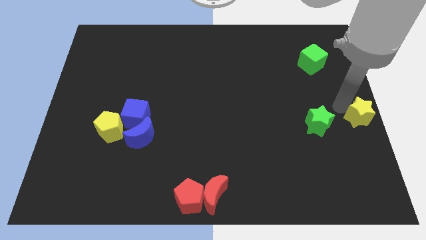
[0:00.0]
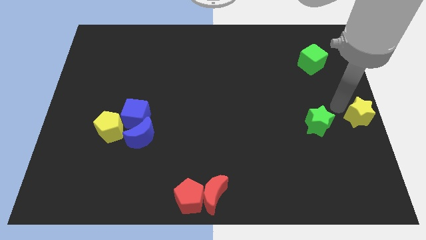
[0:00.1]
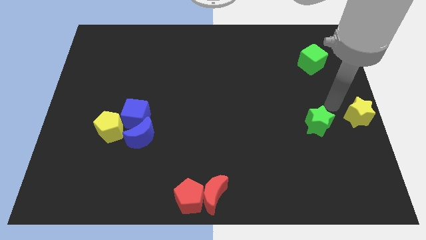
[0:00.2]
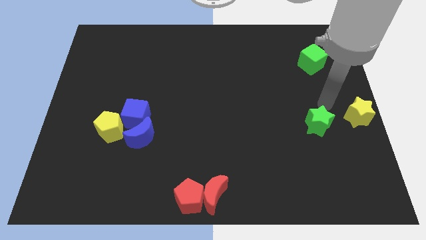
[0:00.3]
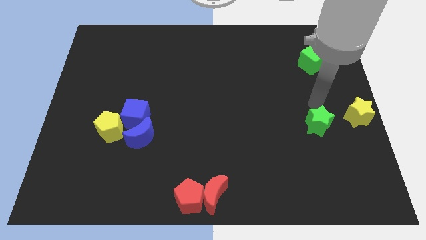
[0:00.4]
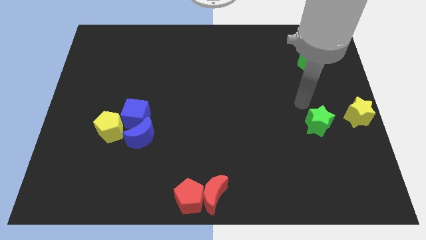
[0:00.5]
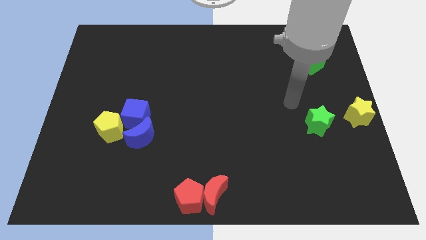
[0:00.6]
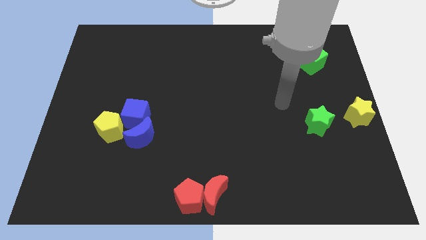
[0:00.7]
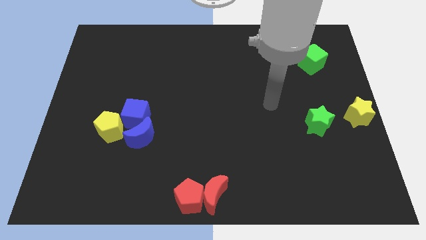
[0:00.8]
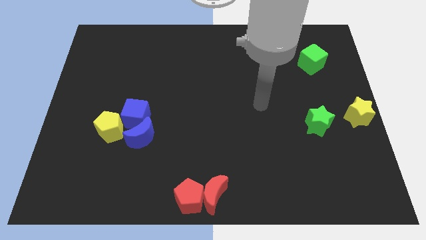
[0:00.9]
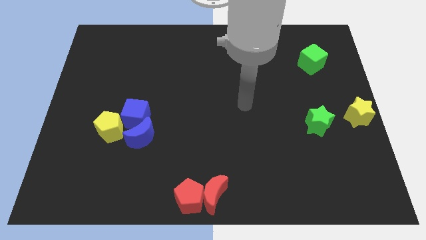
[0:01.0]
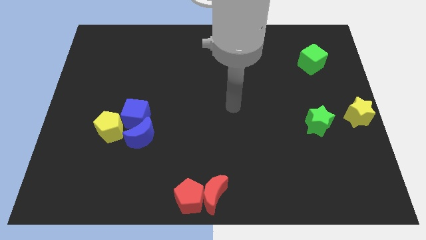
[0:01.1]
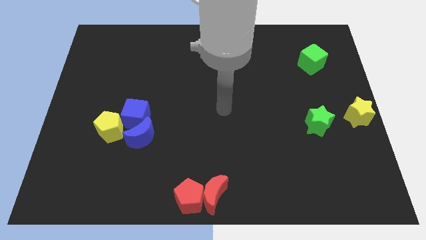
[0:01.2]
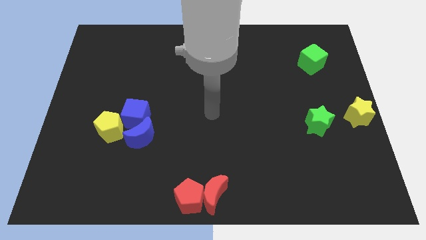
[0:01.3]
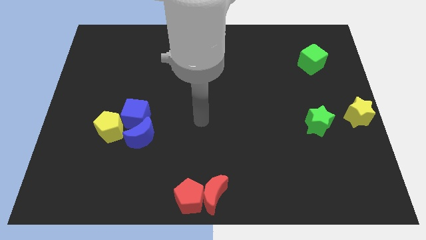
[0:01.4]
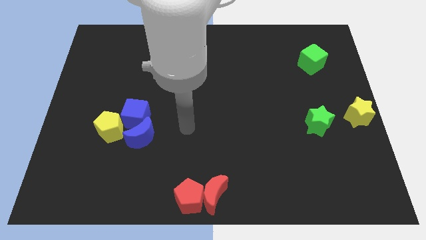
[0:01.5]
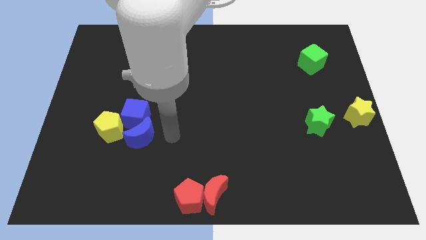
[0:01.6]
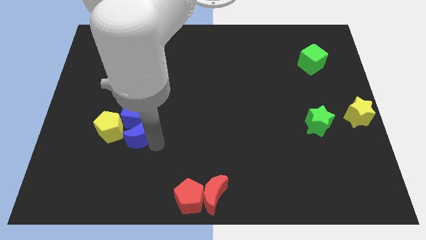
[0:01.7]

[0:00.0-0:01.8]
move the arm to the right of the blue crescent

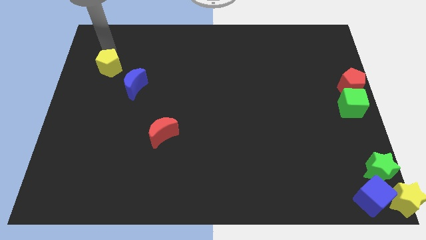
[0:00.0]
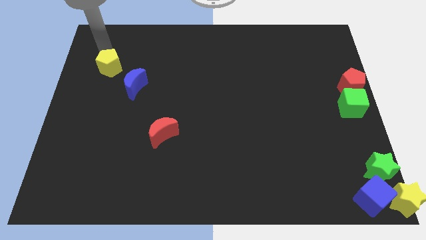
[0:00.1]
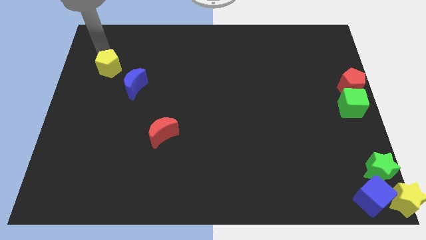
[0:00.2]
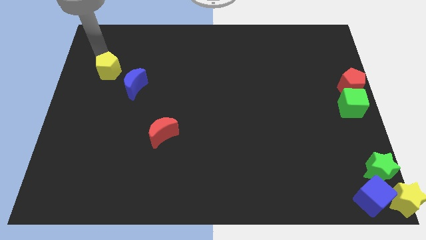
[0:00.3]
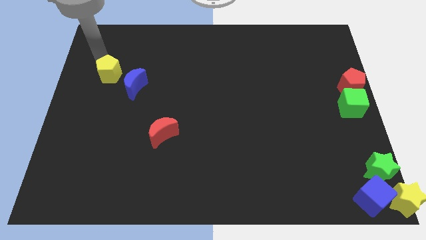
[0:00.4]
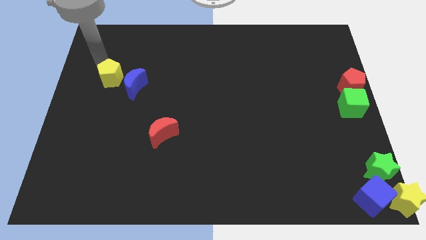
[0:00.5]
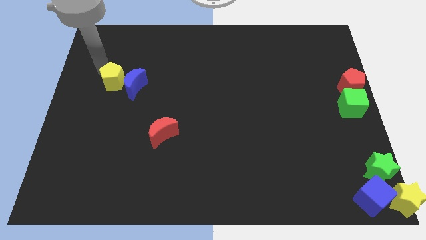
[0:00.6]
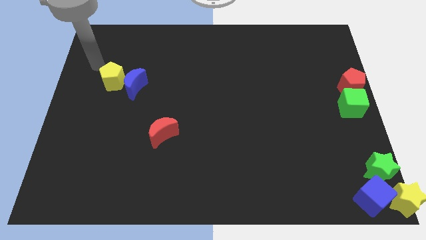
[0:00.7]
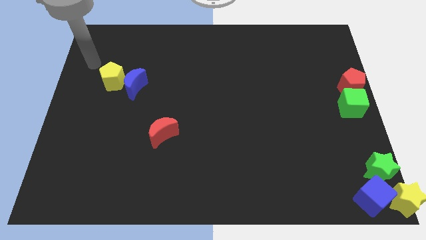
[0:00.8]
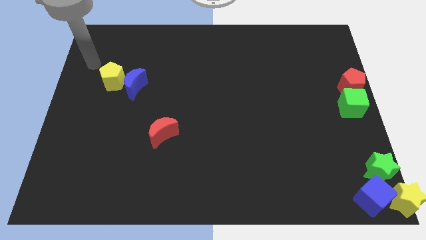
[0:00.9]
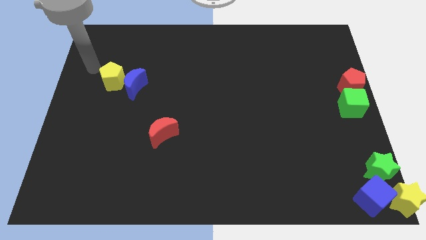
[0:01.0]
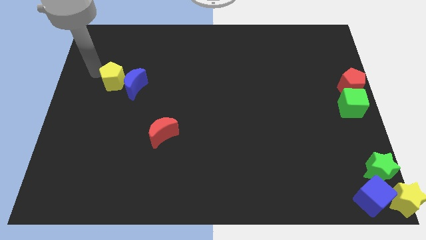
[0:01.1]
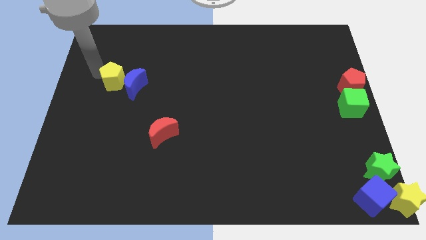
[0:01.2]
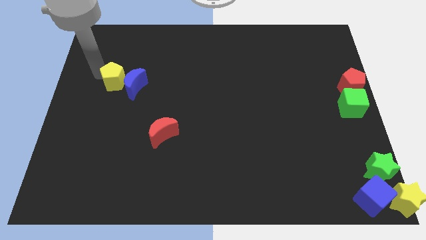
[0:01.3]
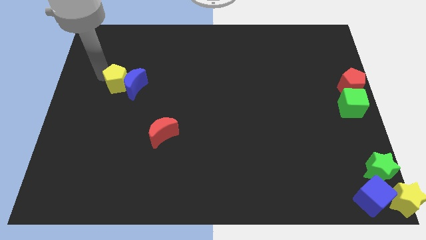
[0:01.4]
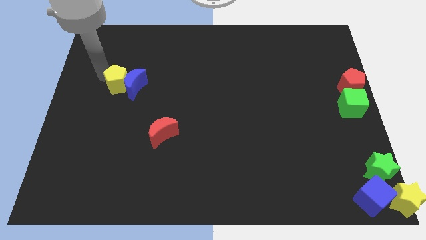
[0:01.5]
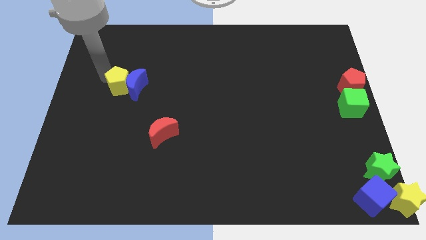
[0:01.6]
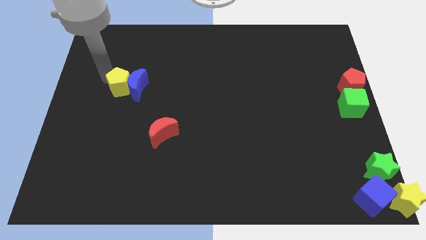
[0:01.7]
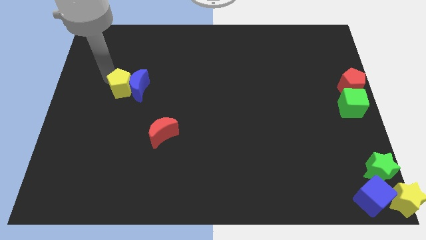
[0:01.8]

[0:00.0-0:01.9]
push the yellow pentagon into the blue moon

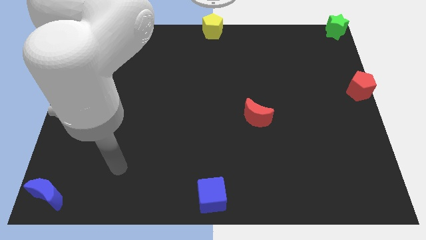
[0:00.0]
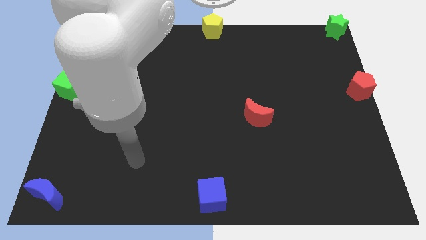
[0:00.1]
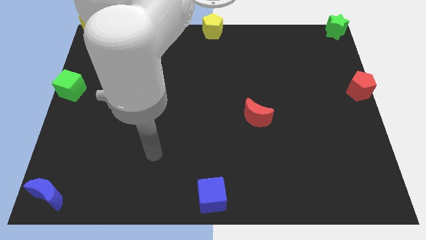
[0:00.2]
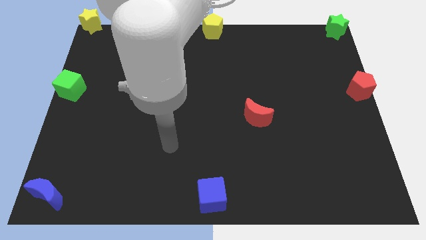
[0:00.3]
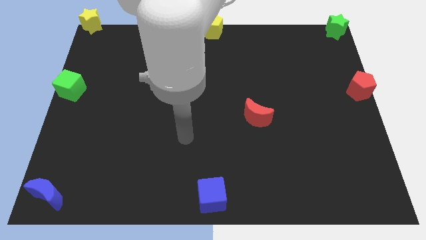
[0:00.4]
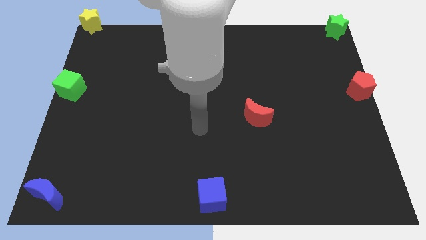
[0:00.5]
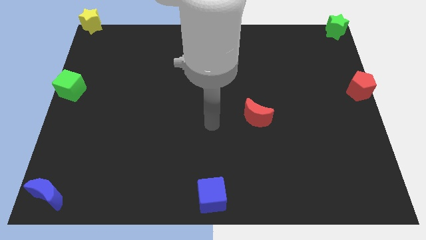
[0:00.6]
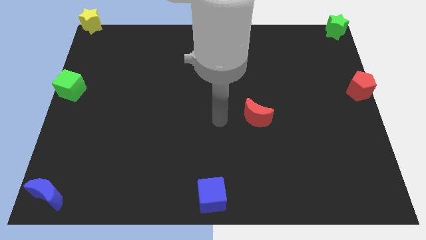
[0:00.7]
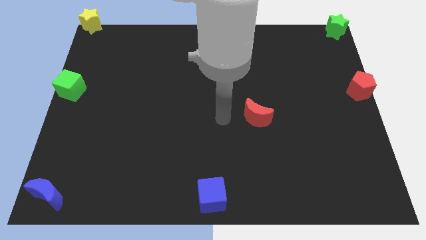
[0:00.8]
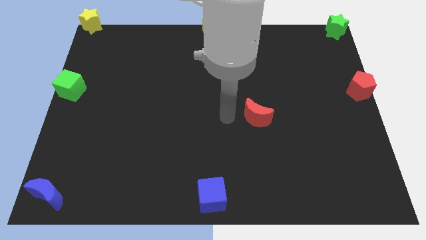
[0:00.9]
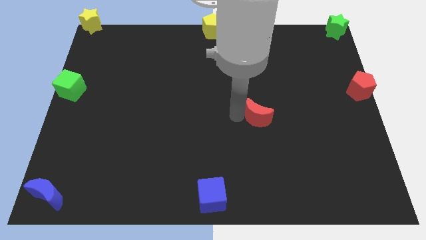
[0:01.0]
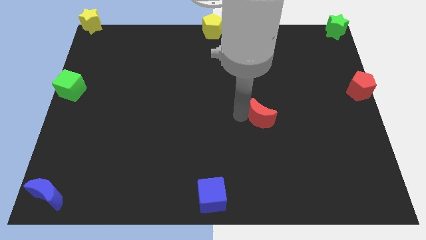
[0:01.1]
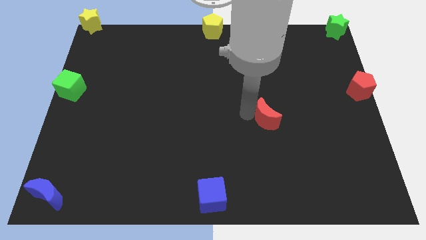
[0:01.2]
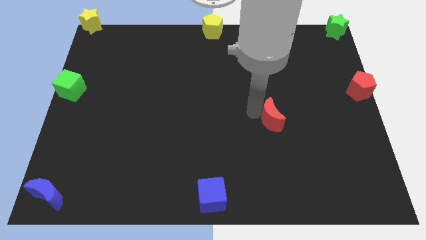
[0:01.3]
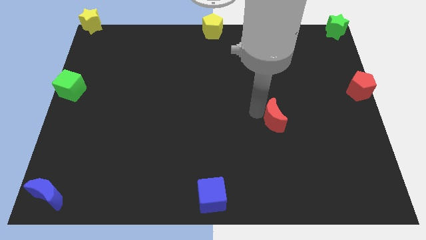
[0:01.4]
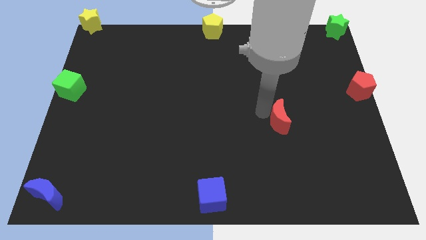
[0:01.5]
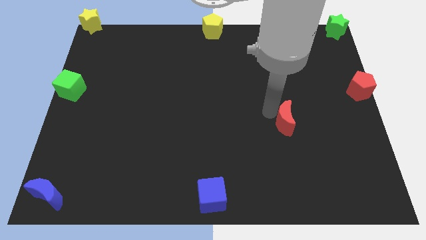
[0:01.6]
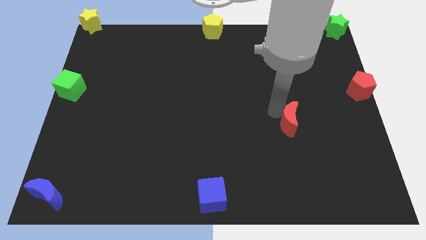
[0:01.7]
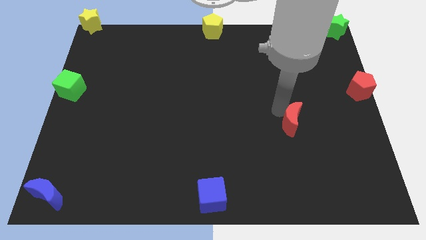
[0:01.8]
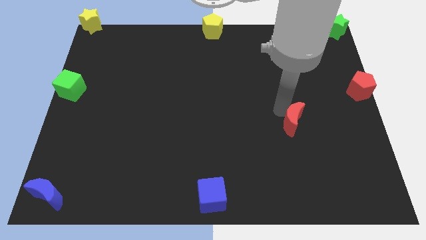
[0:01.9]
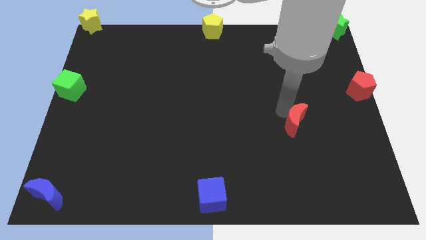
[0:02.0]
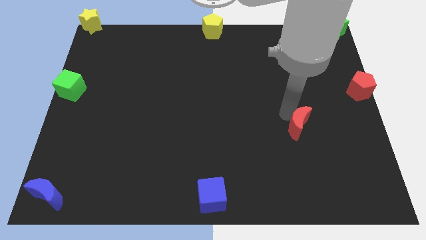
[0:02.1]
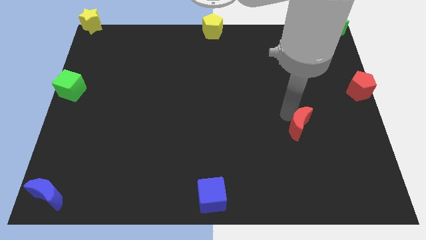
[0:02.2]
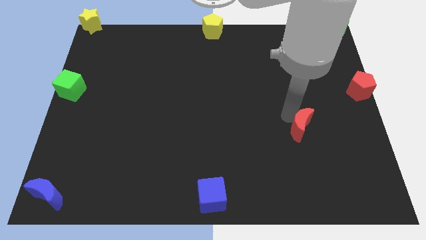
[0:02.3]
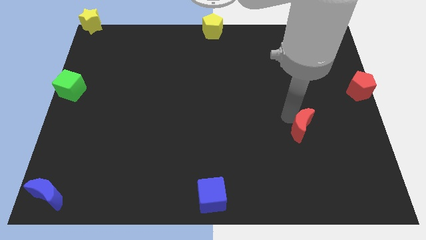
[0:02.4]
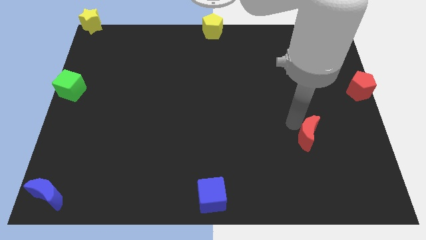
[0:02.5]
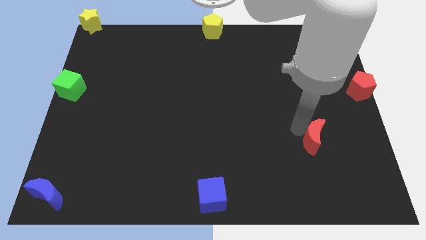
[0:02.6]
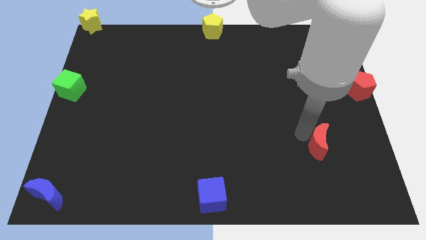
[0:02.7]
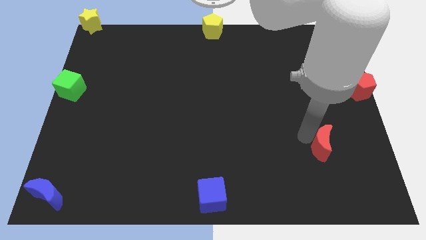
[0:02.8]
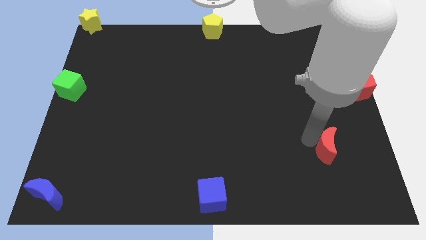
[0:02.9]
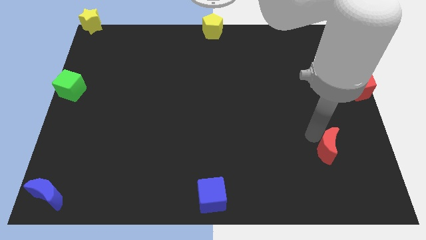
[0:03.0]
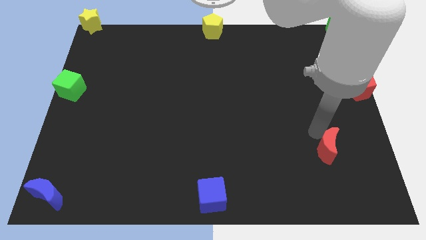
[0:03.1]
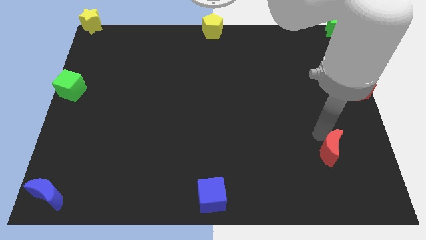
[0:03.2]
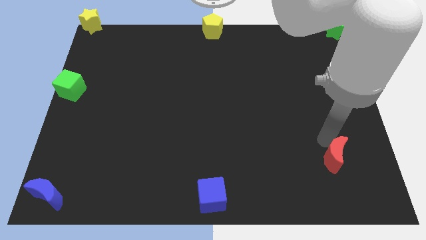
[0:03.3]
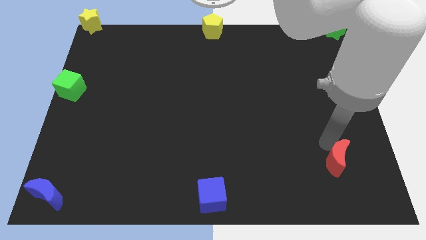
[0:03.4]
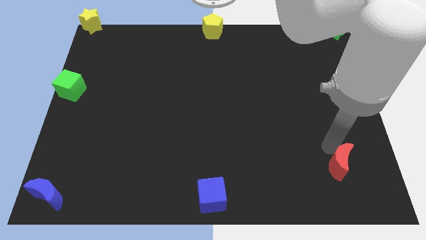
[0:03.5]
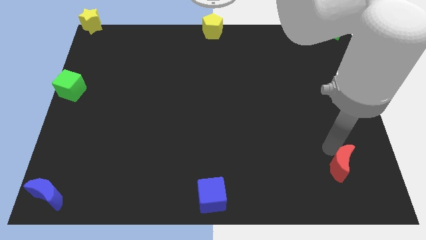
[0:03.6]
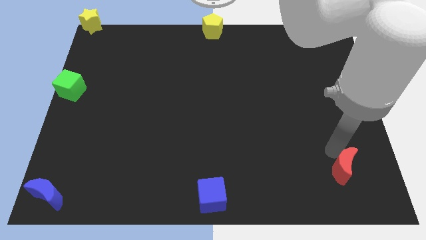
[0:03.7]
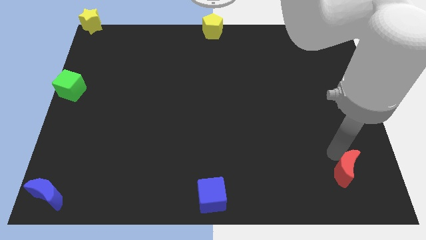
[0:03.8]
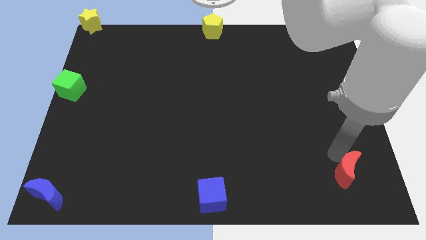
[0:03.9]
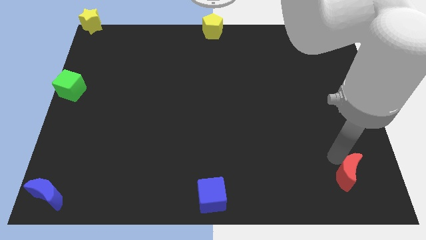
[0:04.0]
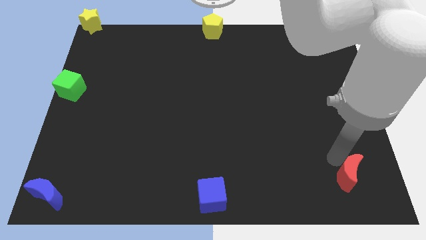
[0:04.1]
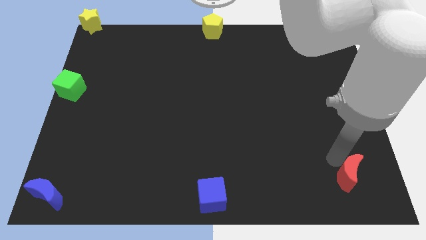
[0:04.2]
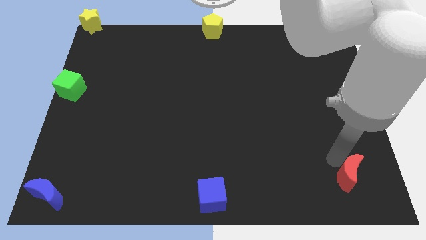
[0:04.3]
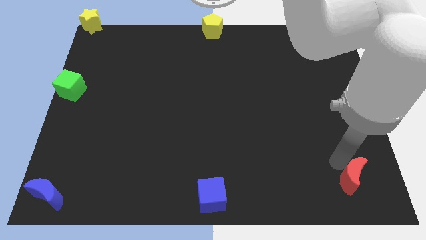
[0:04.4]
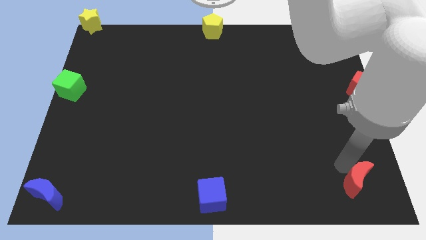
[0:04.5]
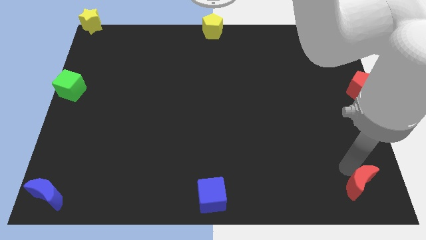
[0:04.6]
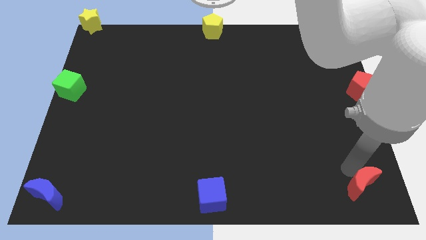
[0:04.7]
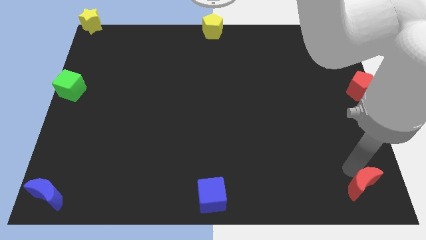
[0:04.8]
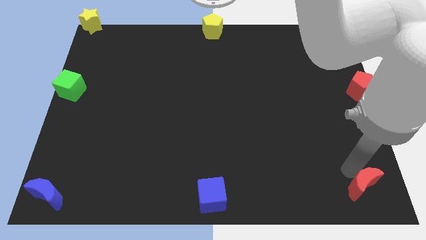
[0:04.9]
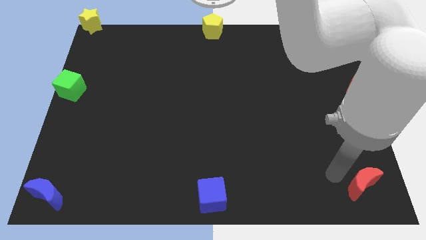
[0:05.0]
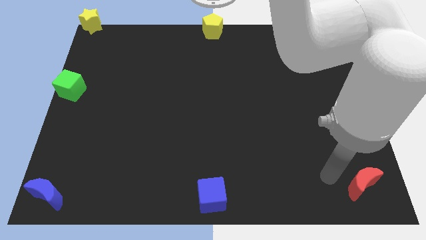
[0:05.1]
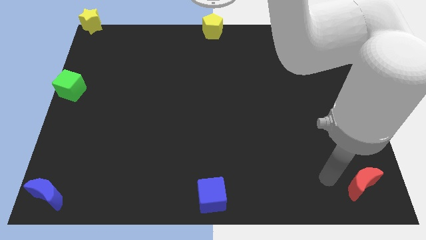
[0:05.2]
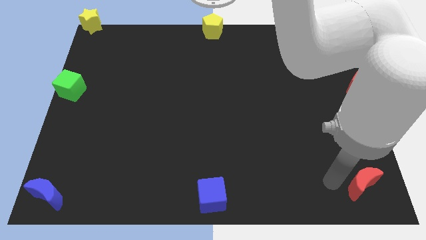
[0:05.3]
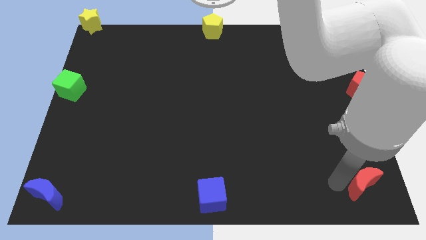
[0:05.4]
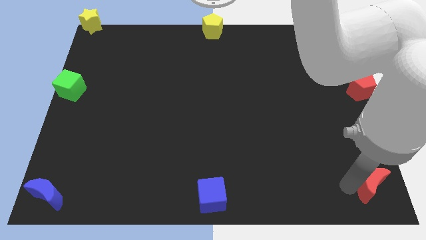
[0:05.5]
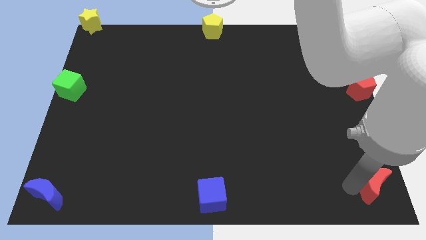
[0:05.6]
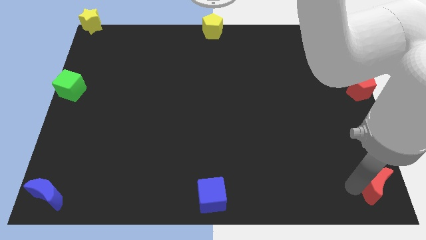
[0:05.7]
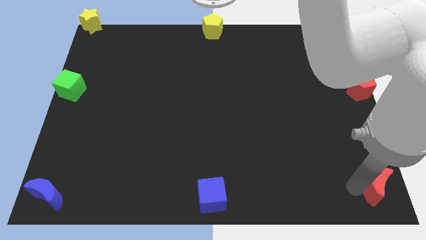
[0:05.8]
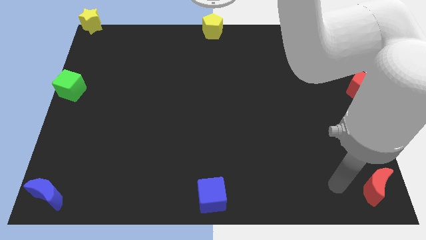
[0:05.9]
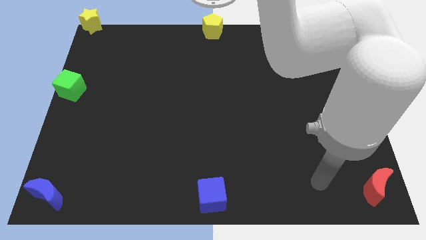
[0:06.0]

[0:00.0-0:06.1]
place the red moon to the bottom right of the board
